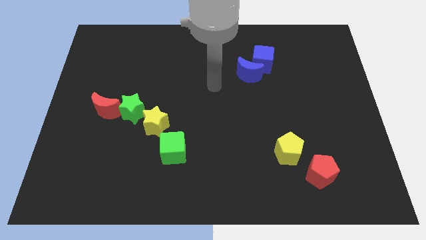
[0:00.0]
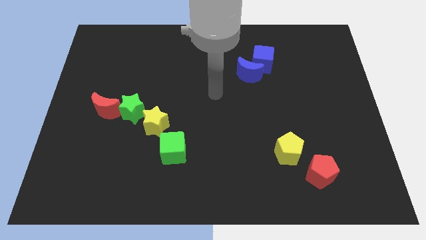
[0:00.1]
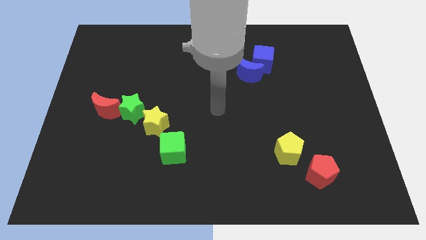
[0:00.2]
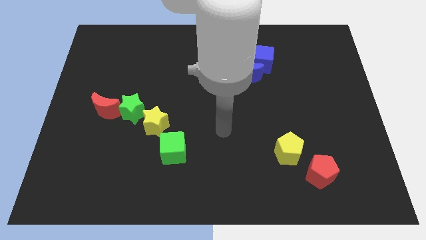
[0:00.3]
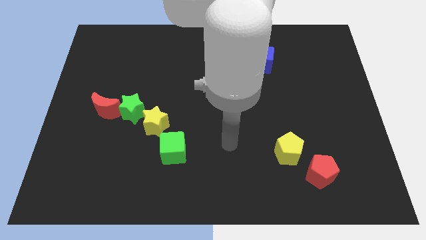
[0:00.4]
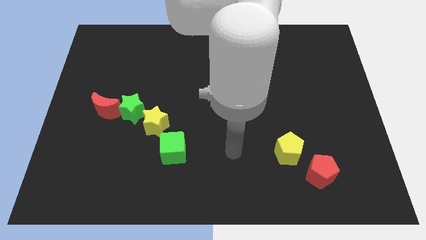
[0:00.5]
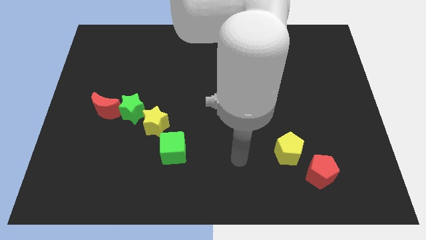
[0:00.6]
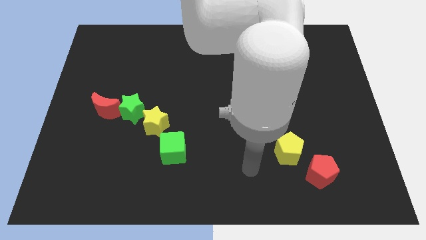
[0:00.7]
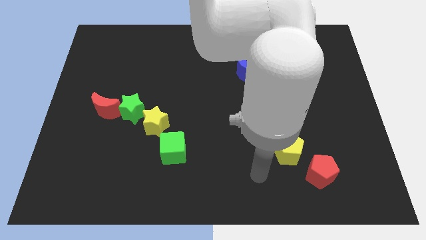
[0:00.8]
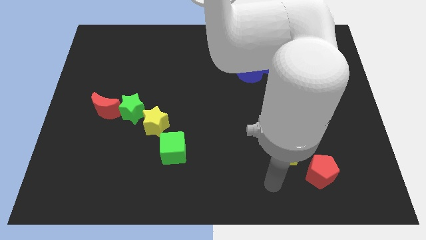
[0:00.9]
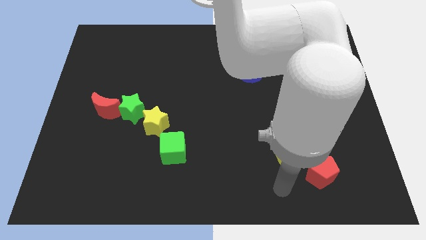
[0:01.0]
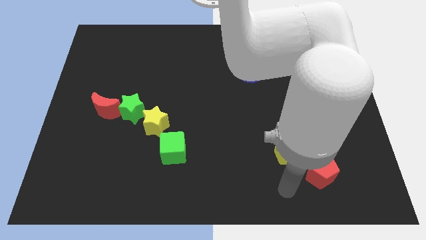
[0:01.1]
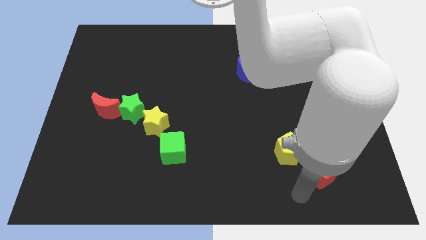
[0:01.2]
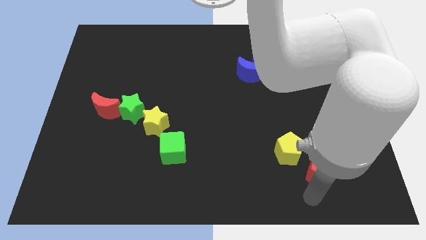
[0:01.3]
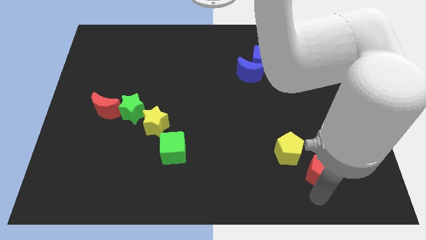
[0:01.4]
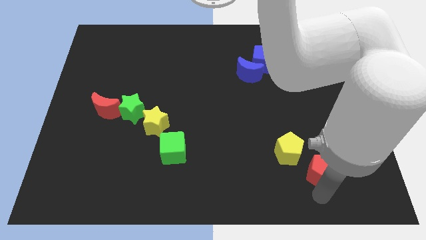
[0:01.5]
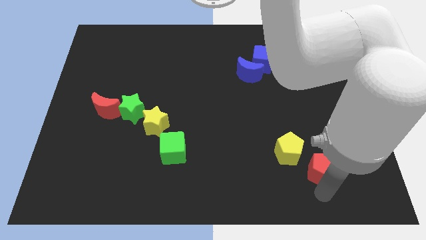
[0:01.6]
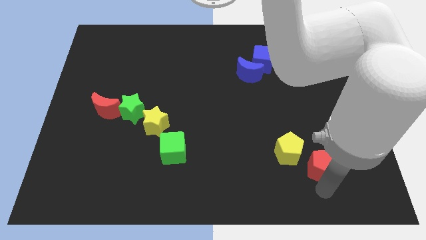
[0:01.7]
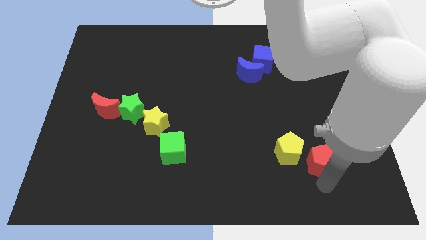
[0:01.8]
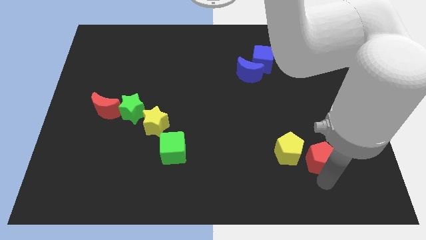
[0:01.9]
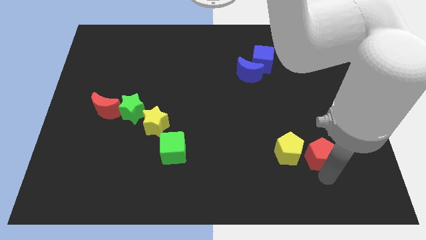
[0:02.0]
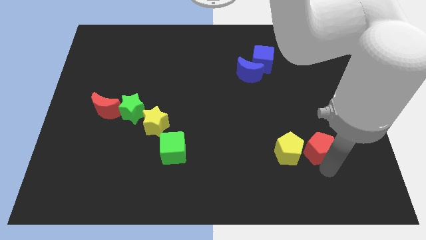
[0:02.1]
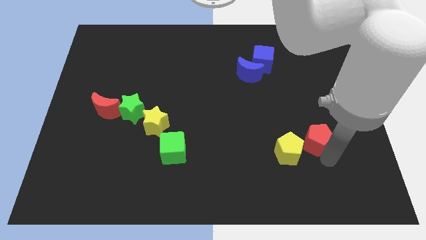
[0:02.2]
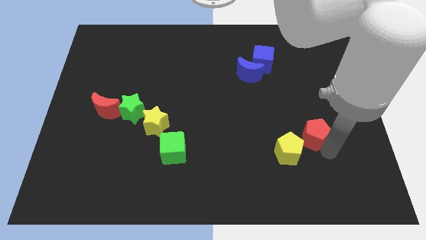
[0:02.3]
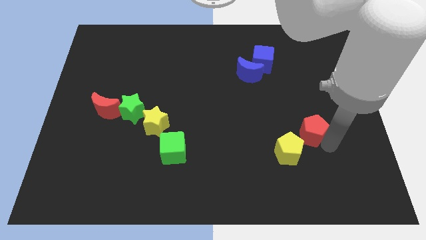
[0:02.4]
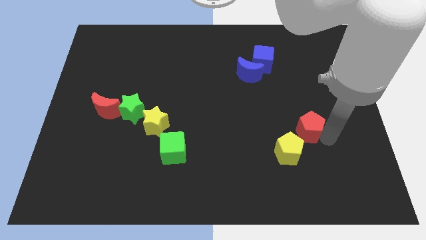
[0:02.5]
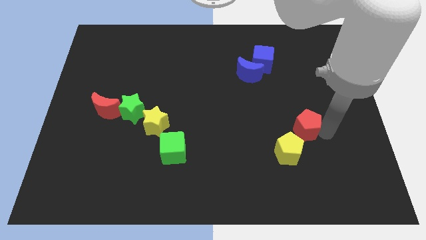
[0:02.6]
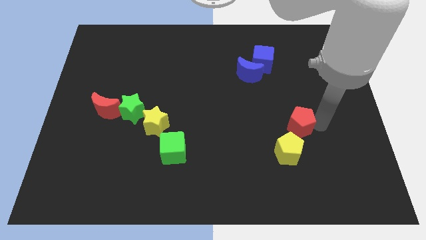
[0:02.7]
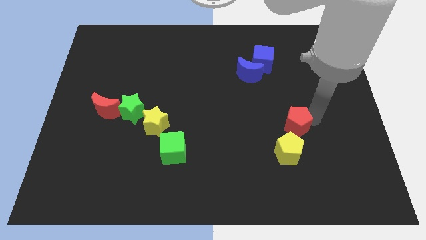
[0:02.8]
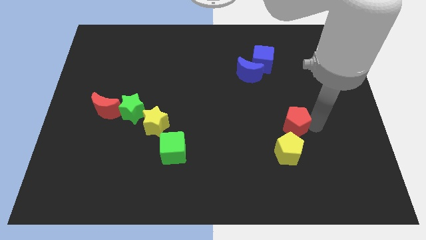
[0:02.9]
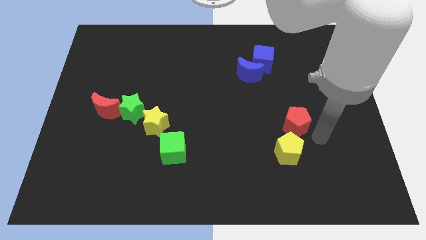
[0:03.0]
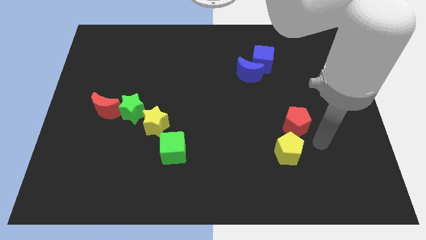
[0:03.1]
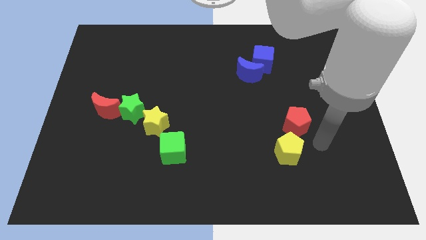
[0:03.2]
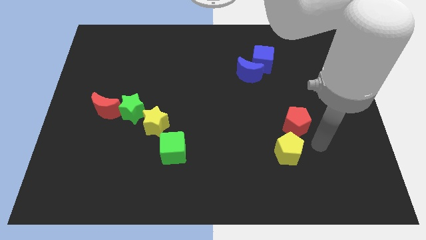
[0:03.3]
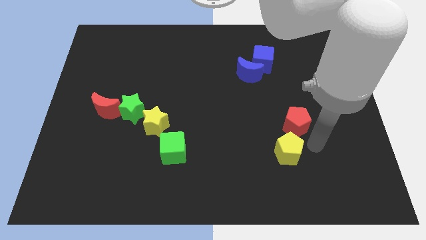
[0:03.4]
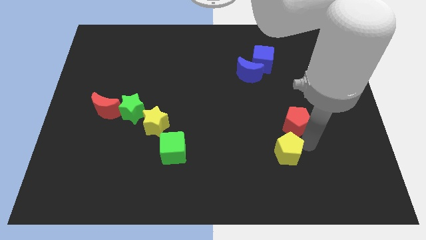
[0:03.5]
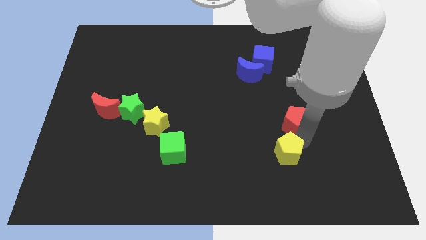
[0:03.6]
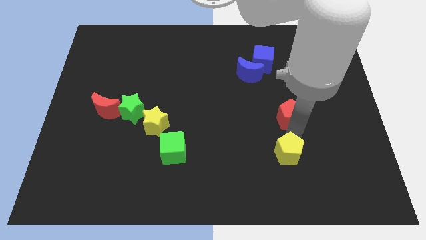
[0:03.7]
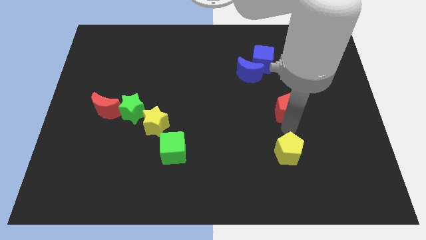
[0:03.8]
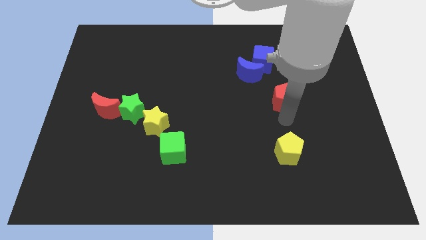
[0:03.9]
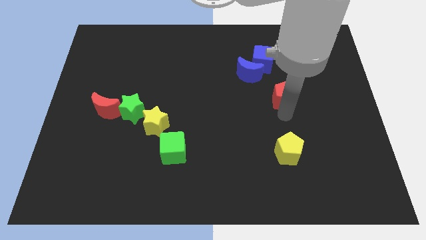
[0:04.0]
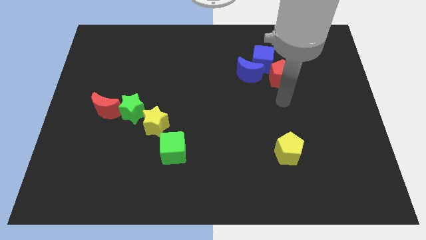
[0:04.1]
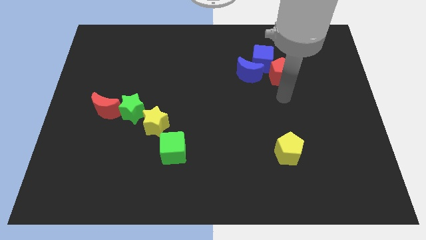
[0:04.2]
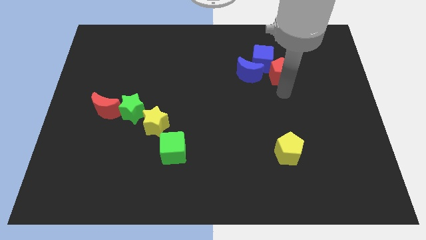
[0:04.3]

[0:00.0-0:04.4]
slide the red pentagon towards the blue cube

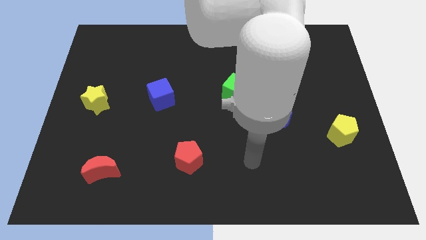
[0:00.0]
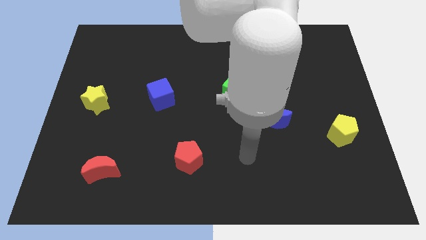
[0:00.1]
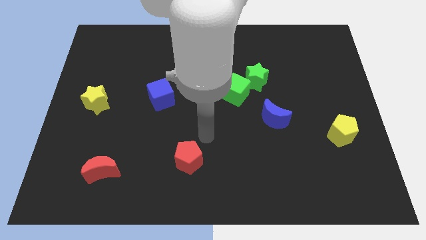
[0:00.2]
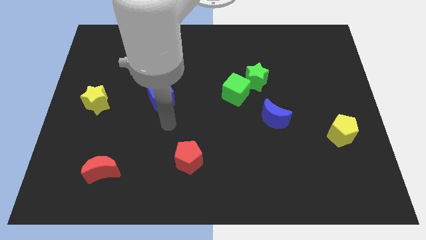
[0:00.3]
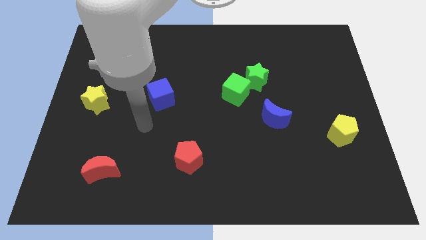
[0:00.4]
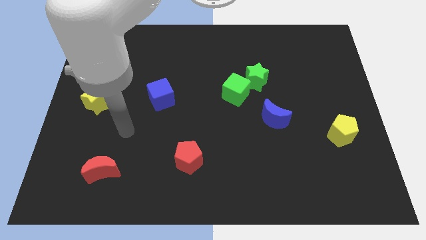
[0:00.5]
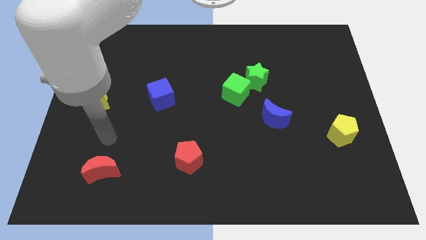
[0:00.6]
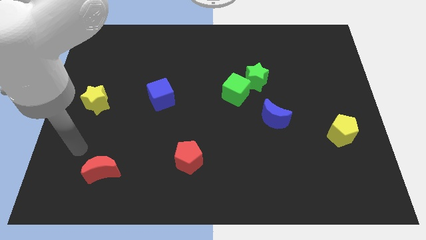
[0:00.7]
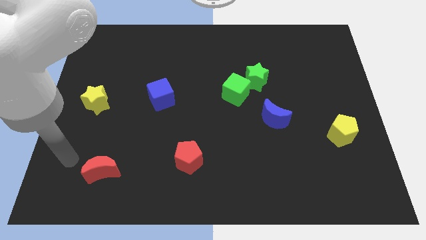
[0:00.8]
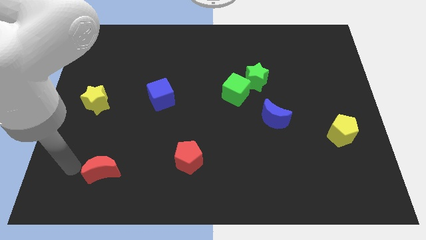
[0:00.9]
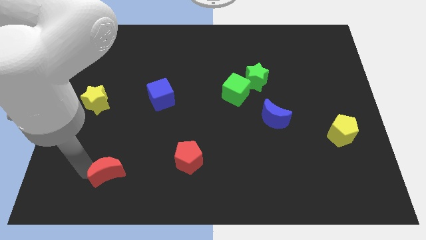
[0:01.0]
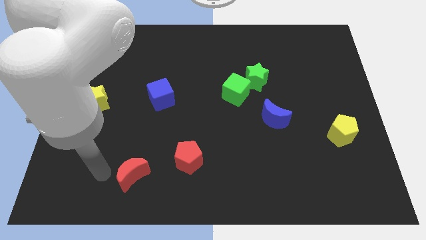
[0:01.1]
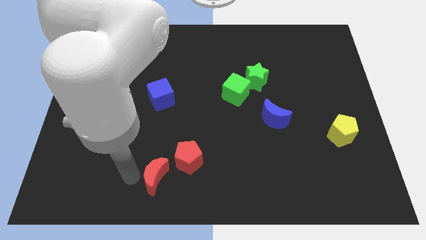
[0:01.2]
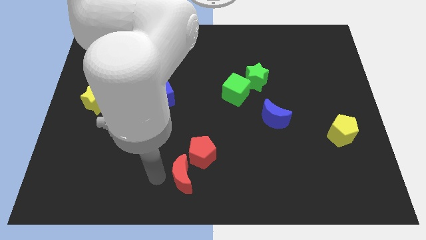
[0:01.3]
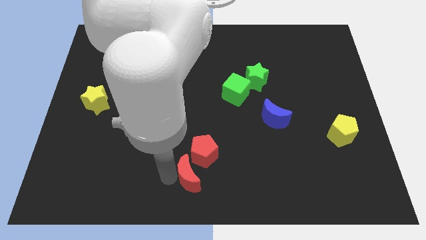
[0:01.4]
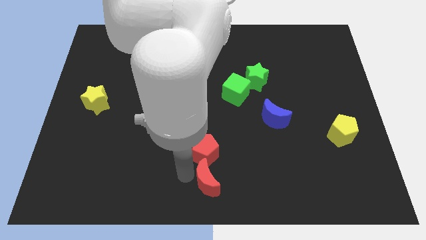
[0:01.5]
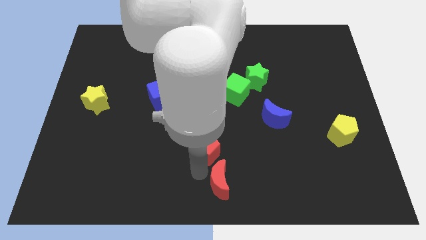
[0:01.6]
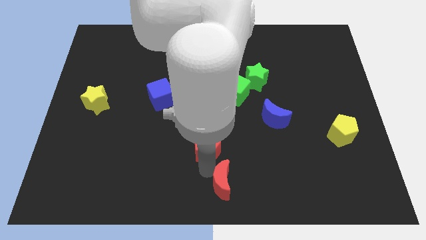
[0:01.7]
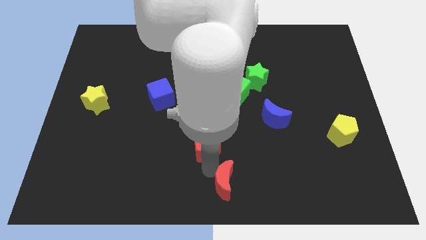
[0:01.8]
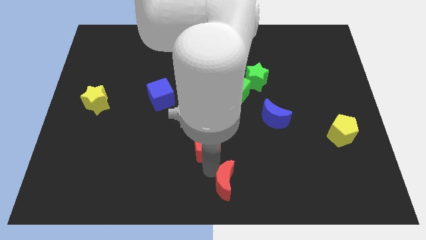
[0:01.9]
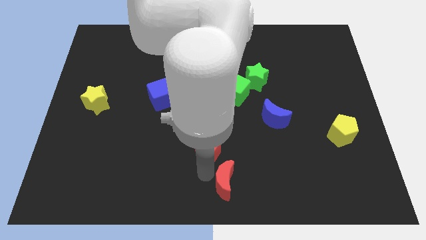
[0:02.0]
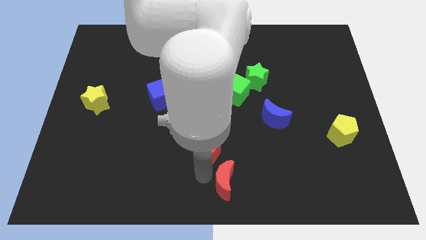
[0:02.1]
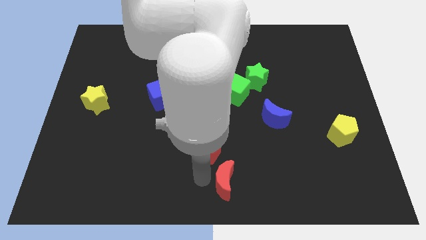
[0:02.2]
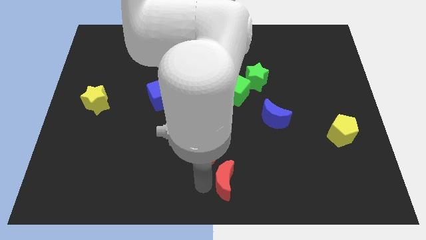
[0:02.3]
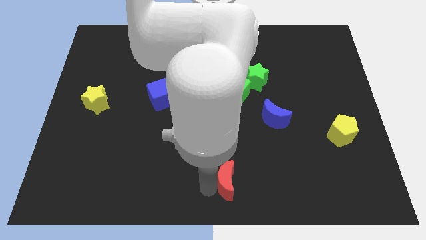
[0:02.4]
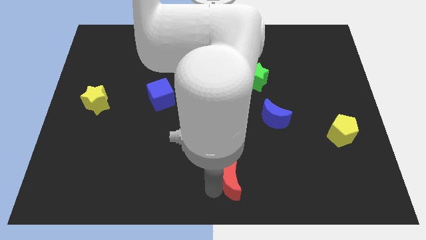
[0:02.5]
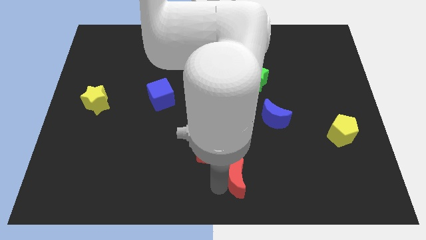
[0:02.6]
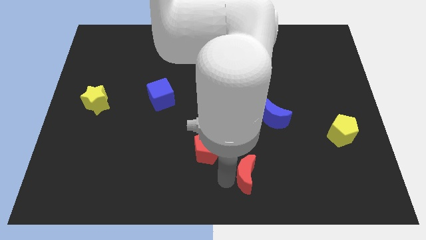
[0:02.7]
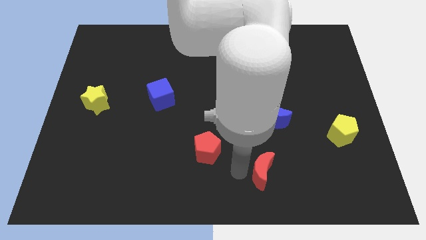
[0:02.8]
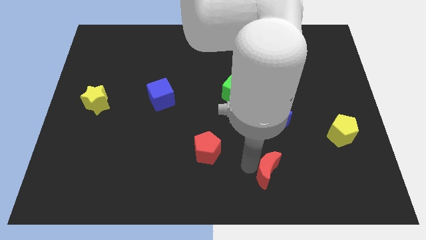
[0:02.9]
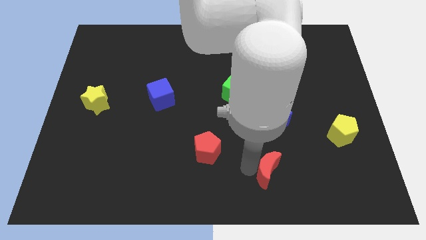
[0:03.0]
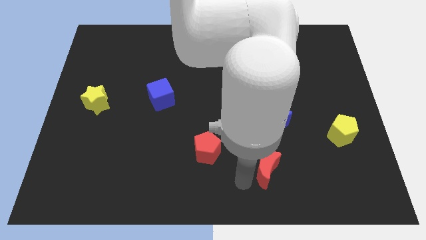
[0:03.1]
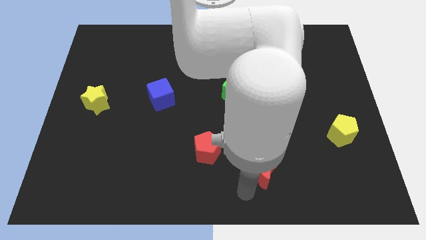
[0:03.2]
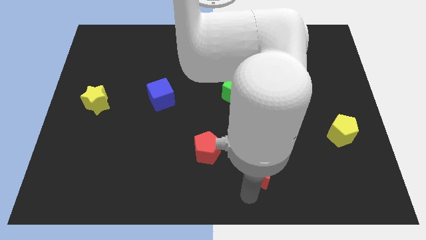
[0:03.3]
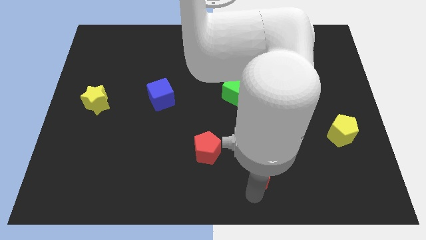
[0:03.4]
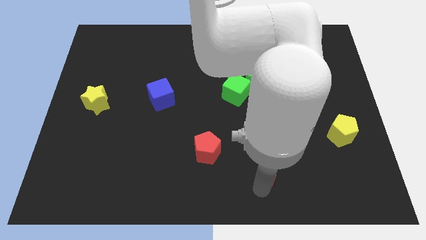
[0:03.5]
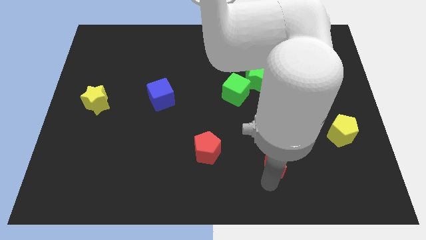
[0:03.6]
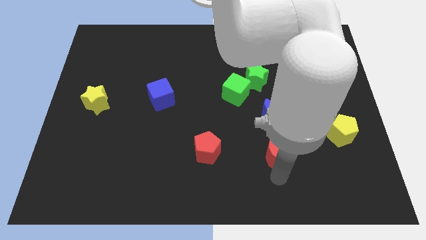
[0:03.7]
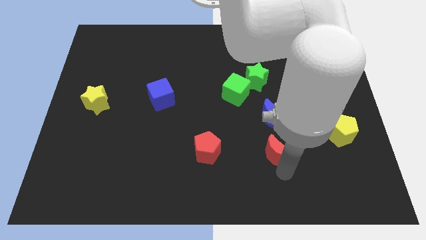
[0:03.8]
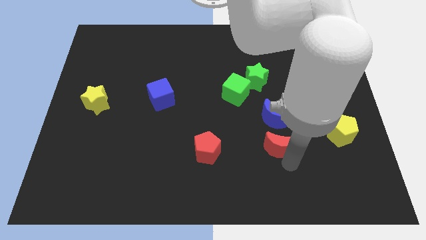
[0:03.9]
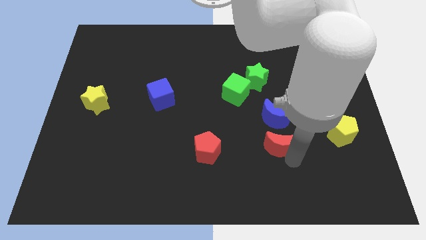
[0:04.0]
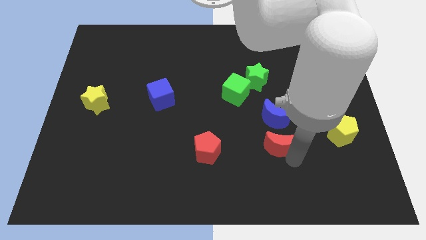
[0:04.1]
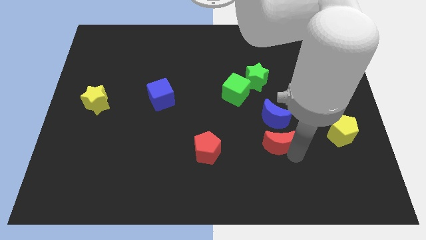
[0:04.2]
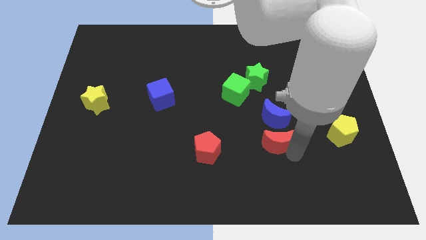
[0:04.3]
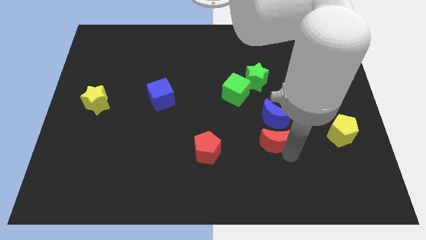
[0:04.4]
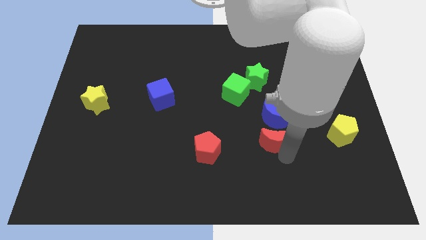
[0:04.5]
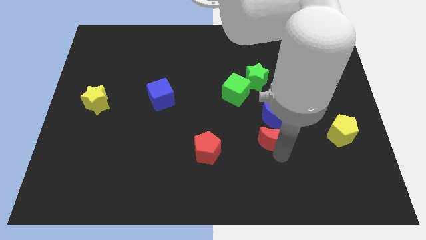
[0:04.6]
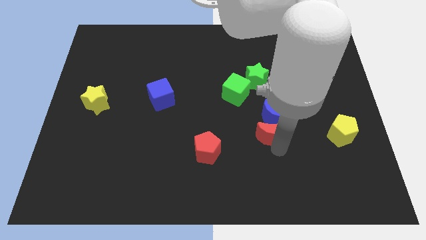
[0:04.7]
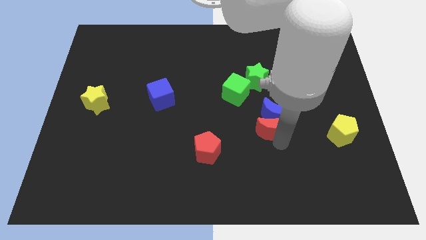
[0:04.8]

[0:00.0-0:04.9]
move the red moon close to the blue moon
